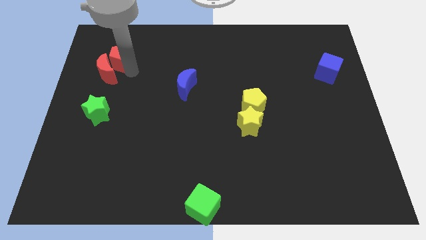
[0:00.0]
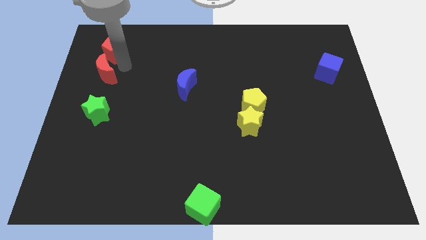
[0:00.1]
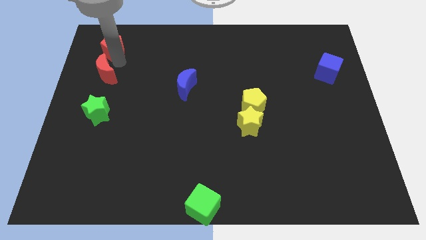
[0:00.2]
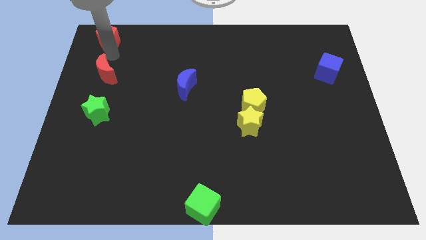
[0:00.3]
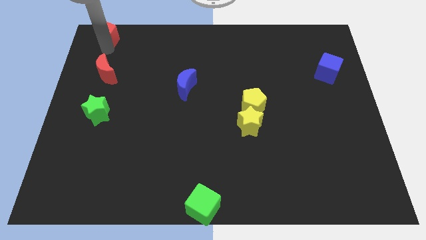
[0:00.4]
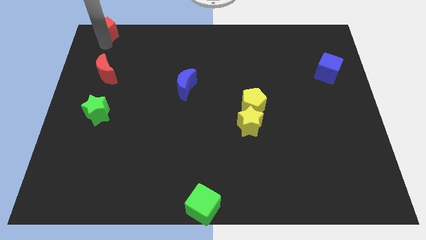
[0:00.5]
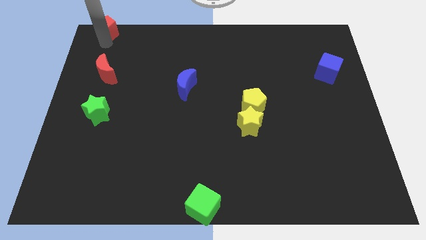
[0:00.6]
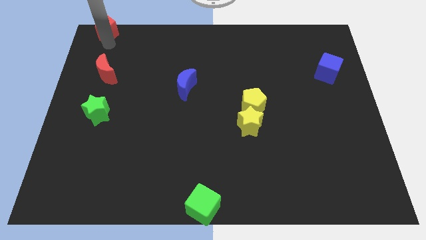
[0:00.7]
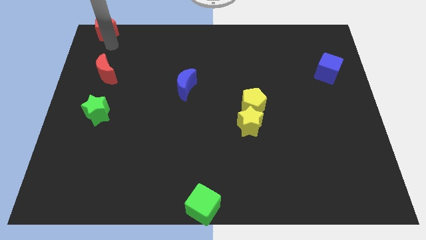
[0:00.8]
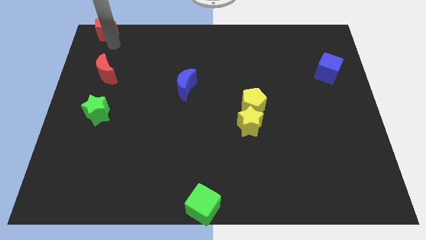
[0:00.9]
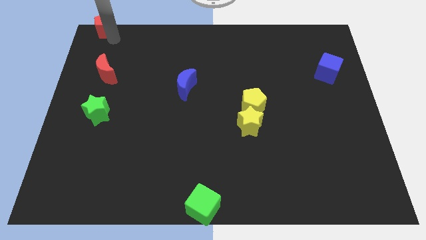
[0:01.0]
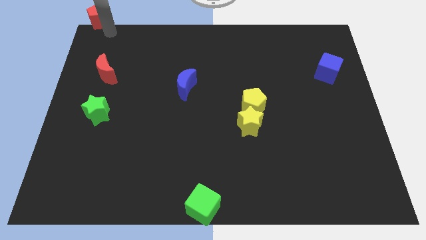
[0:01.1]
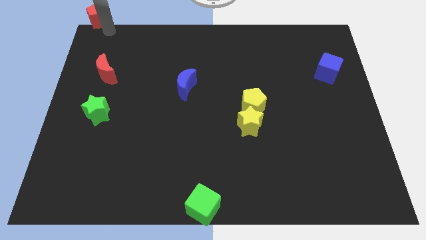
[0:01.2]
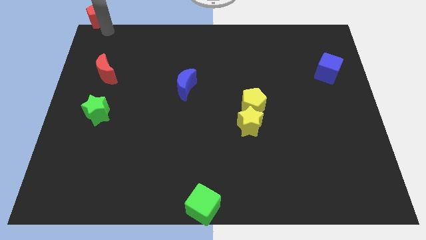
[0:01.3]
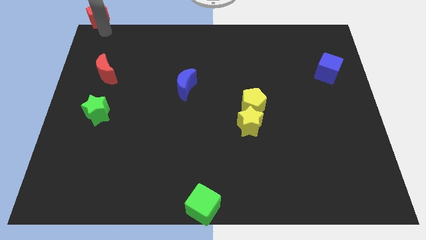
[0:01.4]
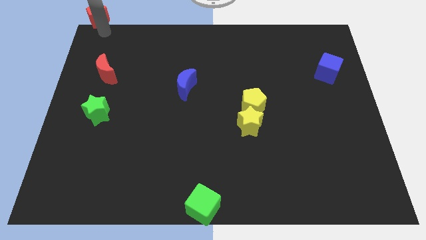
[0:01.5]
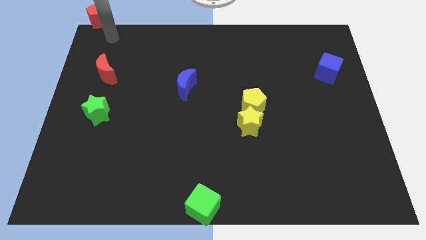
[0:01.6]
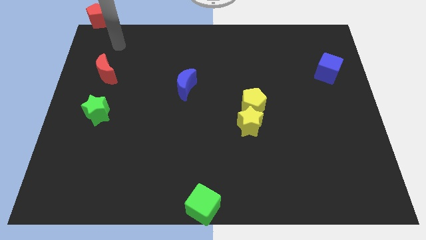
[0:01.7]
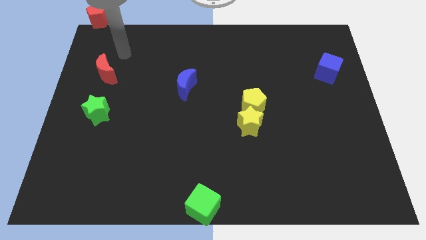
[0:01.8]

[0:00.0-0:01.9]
place the red pentagon to the top left corner of the board

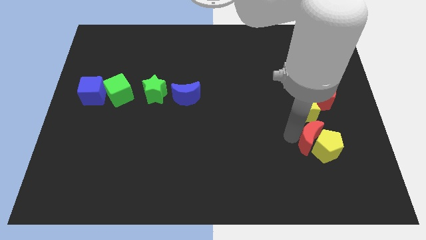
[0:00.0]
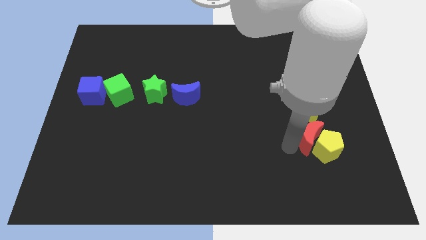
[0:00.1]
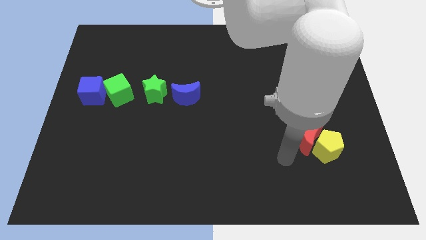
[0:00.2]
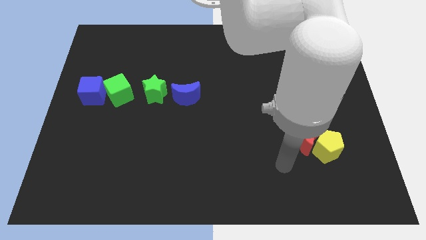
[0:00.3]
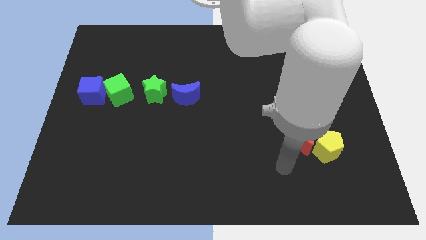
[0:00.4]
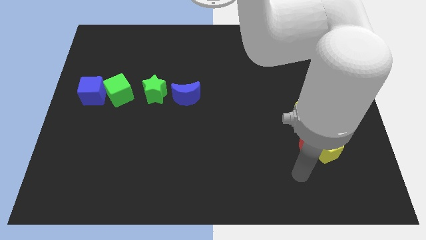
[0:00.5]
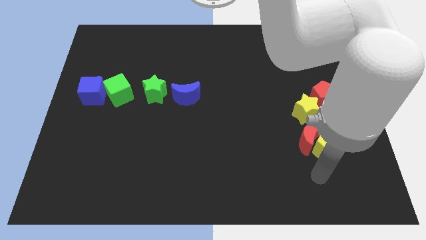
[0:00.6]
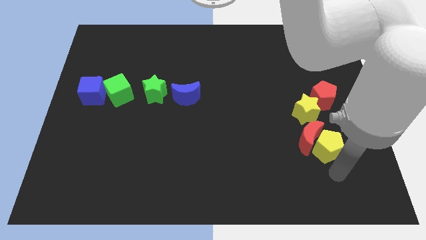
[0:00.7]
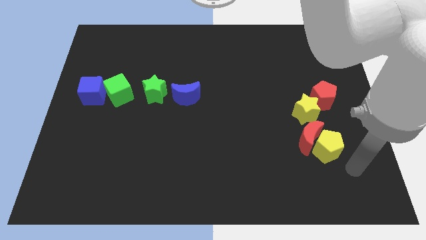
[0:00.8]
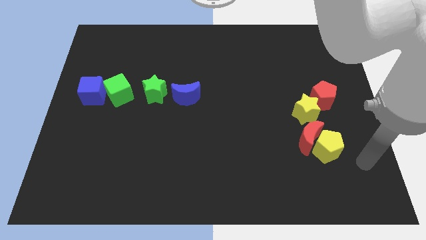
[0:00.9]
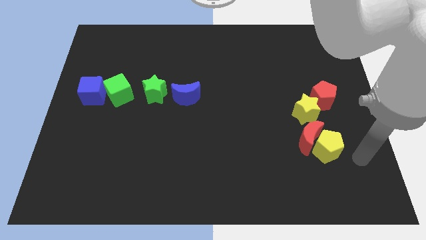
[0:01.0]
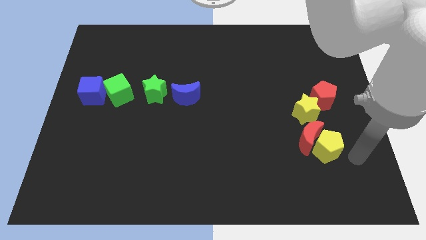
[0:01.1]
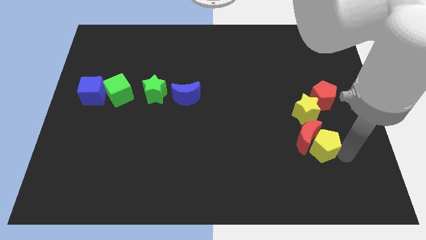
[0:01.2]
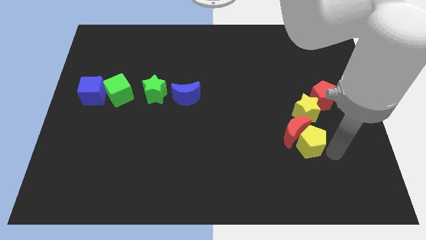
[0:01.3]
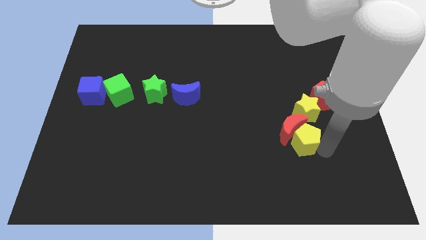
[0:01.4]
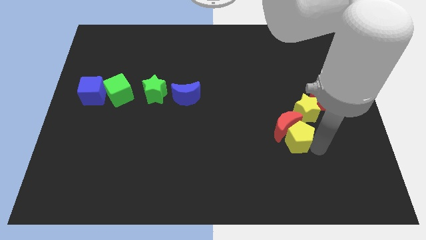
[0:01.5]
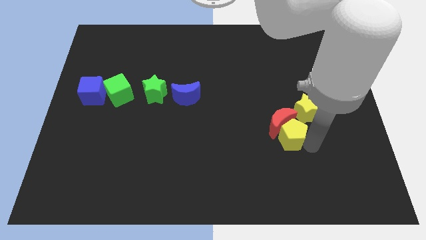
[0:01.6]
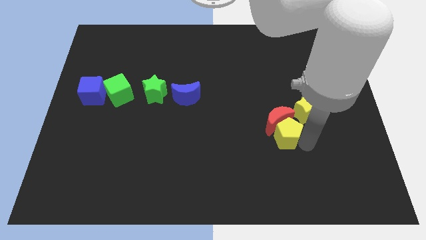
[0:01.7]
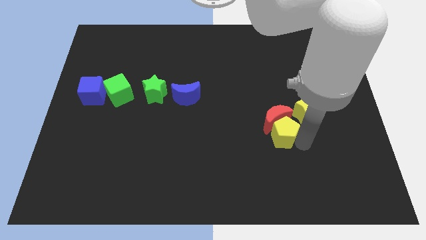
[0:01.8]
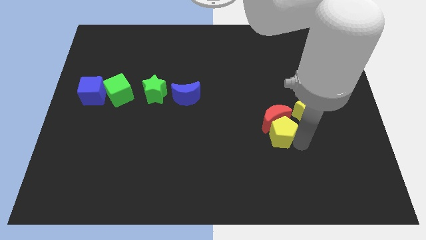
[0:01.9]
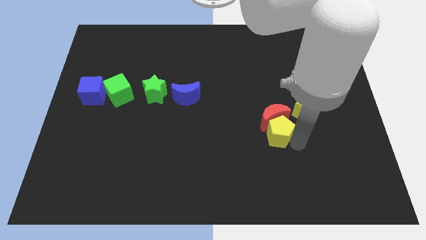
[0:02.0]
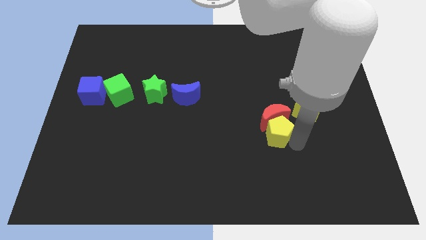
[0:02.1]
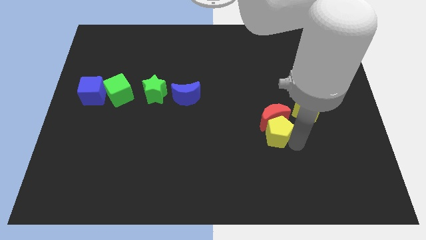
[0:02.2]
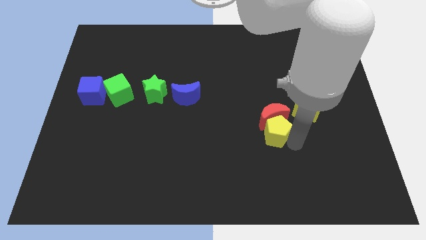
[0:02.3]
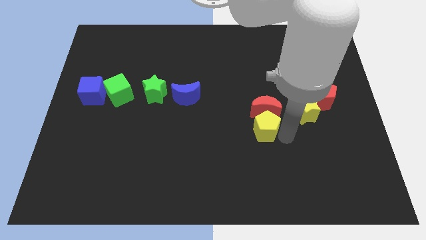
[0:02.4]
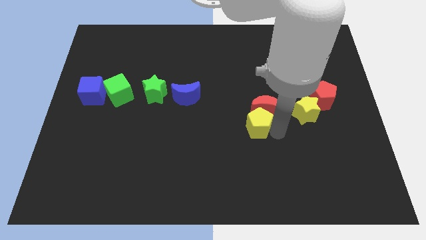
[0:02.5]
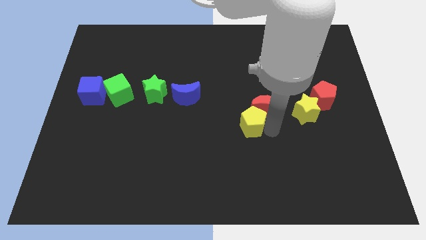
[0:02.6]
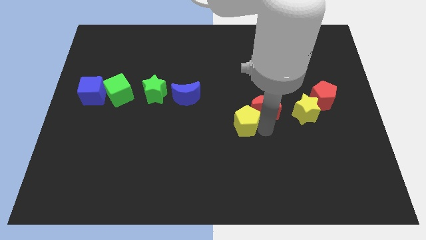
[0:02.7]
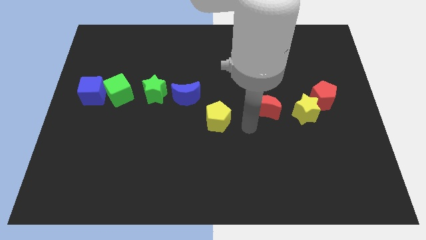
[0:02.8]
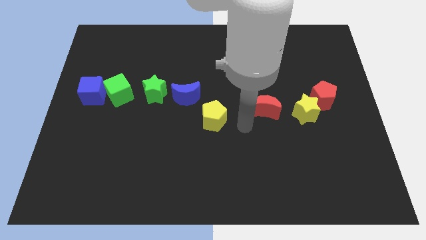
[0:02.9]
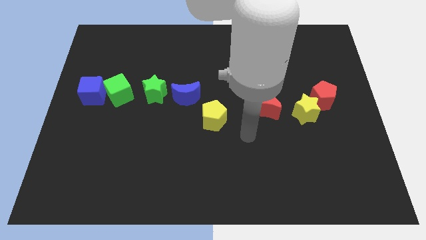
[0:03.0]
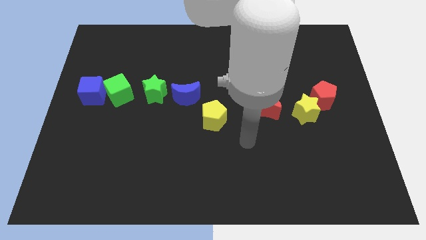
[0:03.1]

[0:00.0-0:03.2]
move the yellow pentagon and the red crescent towards the center of the board

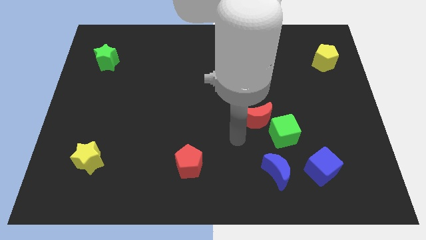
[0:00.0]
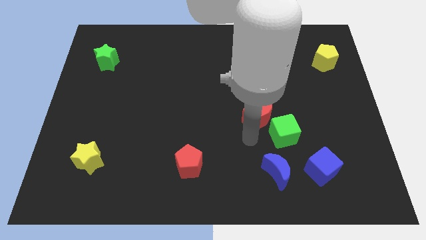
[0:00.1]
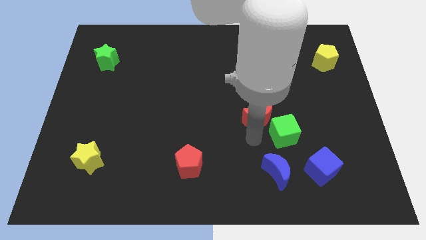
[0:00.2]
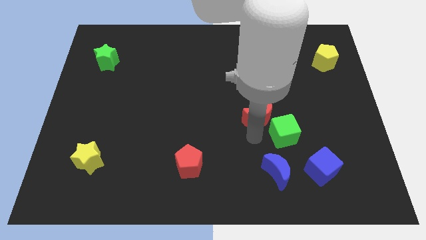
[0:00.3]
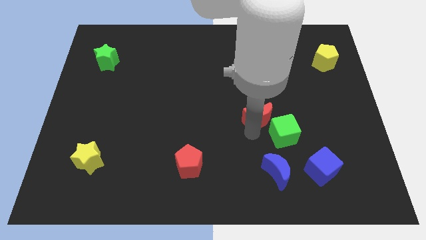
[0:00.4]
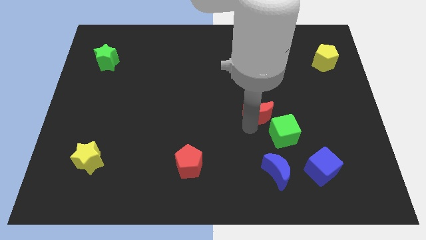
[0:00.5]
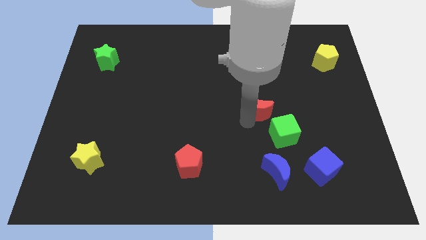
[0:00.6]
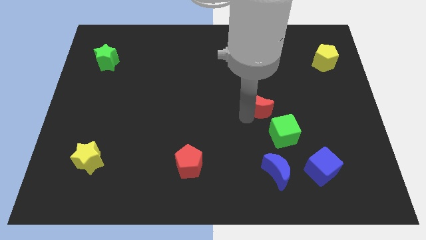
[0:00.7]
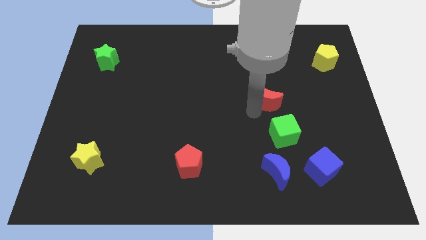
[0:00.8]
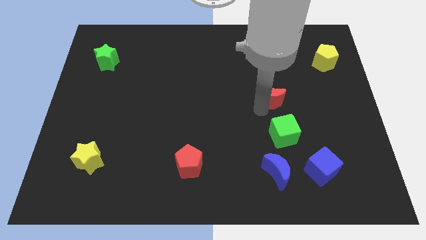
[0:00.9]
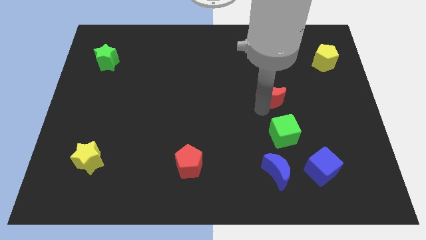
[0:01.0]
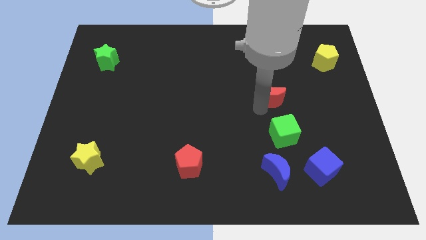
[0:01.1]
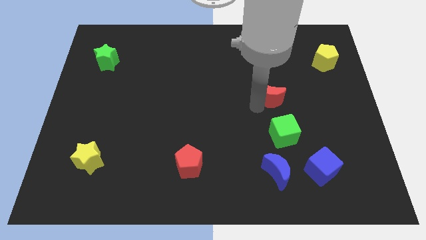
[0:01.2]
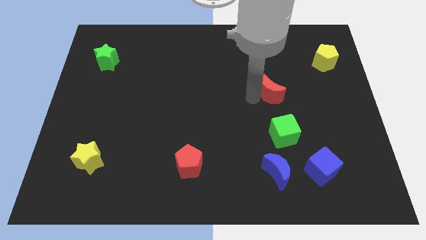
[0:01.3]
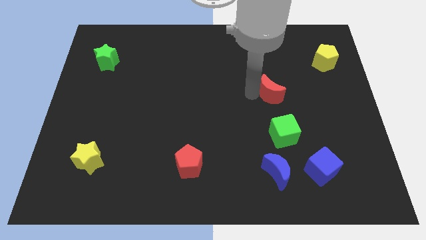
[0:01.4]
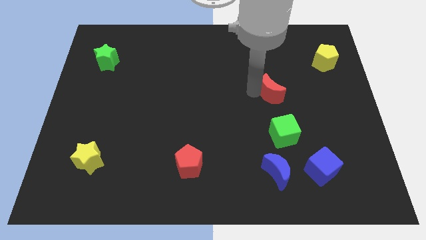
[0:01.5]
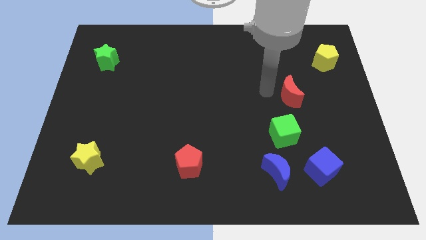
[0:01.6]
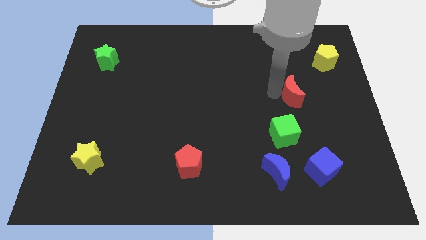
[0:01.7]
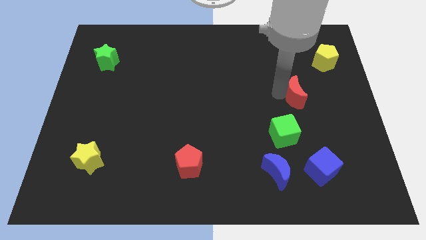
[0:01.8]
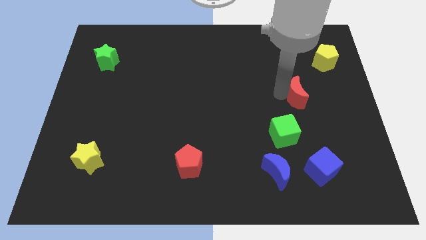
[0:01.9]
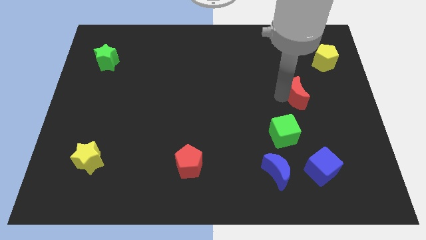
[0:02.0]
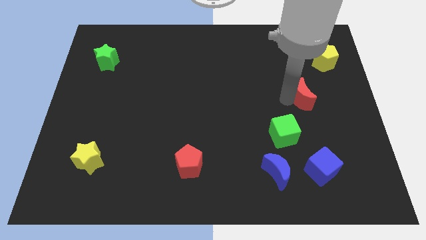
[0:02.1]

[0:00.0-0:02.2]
put the red moon between the green cube and yellow pentagon

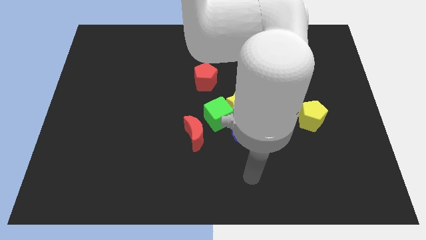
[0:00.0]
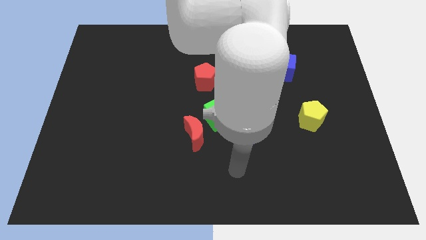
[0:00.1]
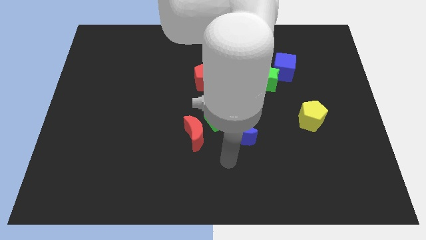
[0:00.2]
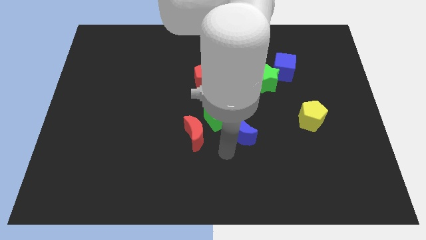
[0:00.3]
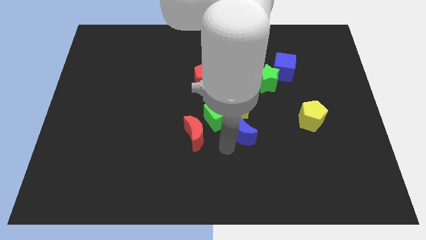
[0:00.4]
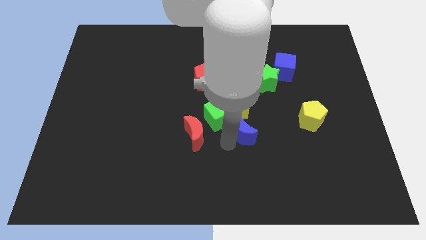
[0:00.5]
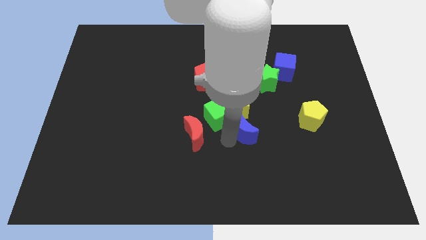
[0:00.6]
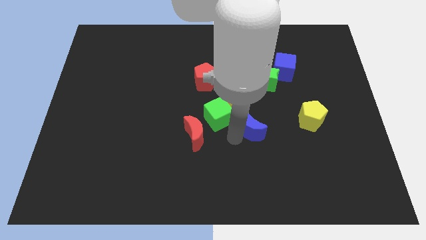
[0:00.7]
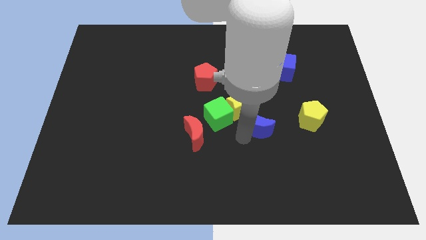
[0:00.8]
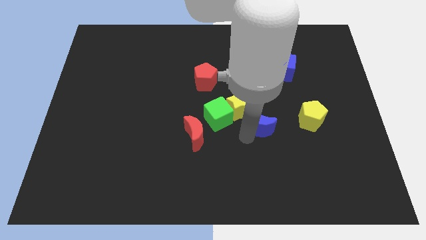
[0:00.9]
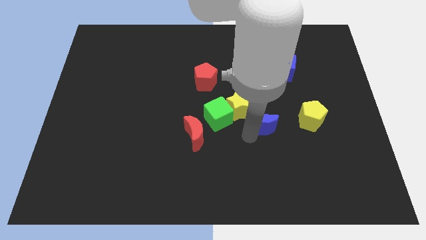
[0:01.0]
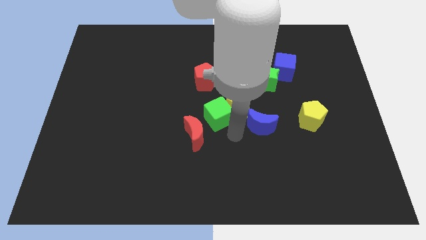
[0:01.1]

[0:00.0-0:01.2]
push the blue moon to the bottom right side of the yellow star

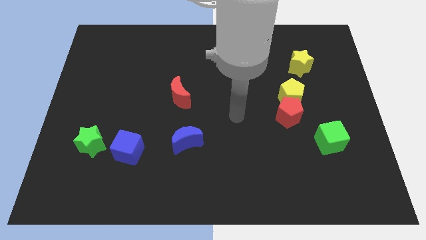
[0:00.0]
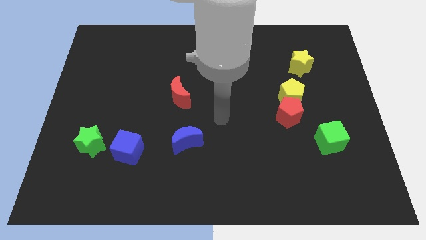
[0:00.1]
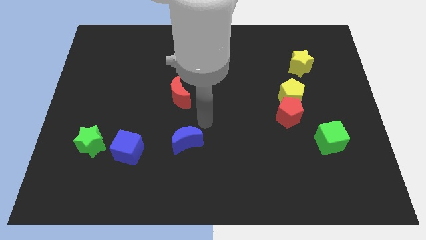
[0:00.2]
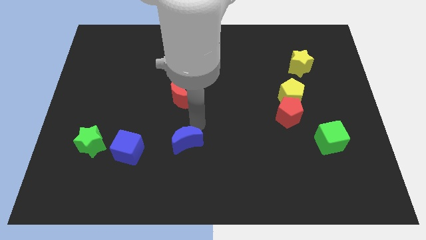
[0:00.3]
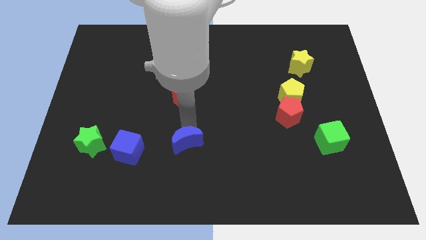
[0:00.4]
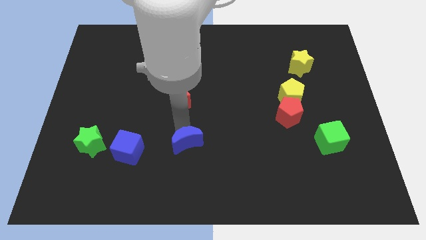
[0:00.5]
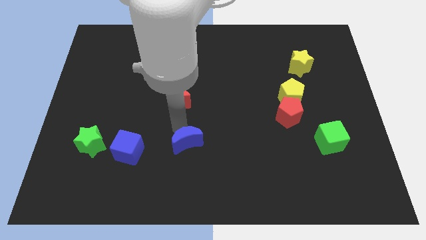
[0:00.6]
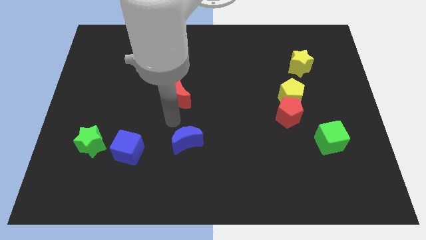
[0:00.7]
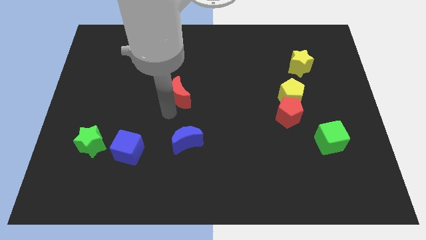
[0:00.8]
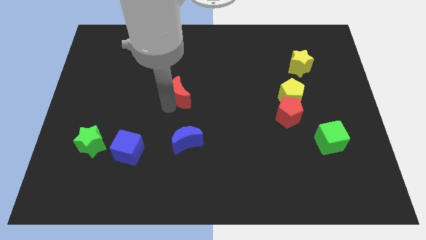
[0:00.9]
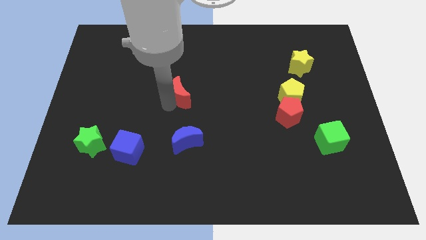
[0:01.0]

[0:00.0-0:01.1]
move your arm towards the red crescent
